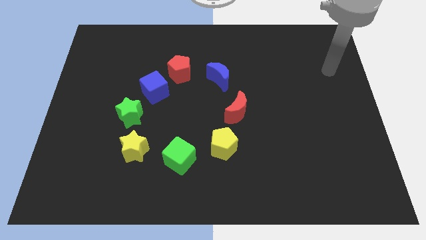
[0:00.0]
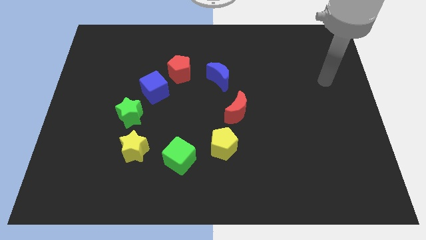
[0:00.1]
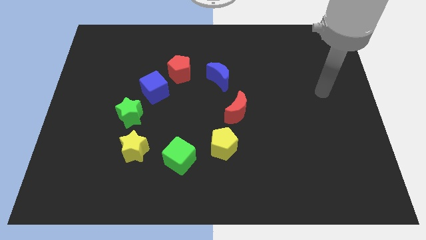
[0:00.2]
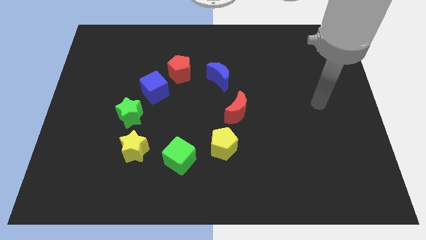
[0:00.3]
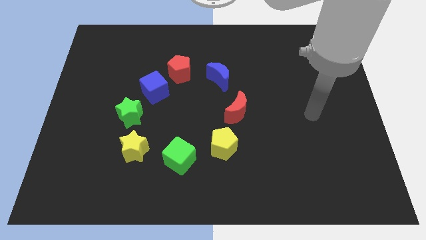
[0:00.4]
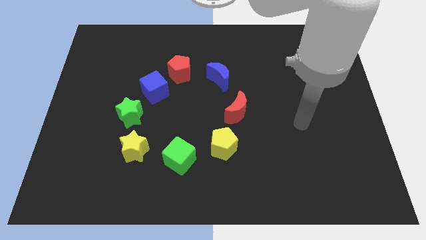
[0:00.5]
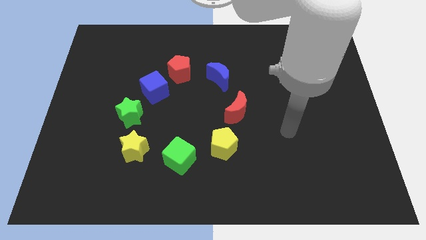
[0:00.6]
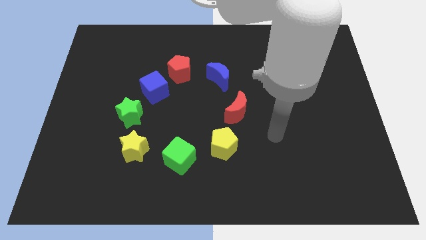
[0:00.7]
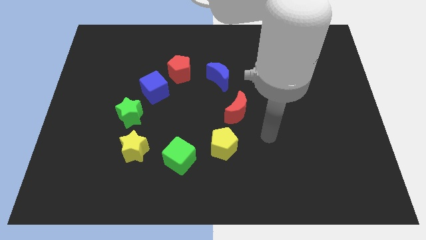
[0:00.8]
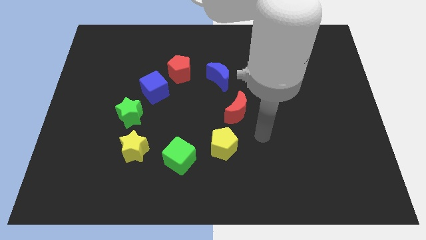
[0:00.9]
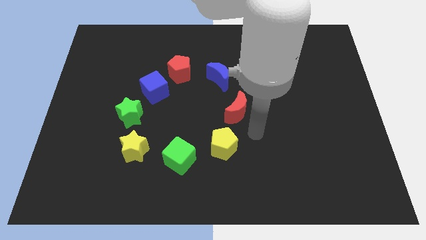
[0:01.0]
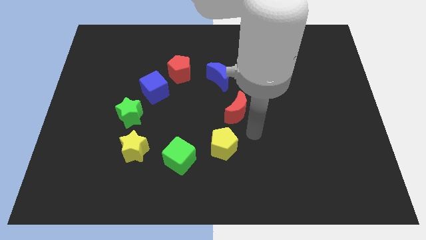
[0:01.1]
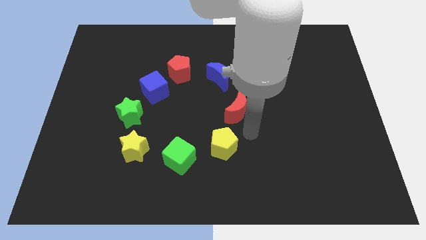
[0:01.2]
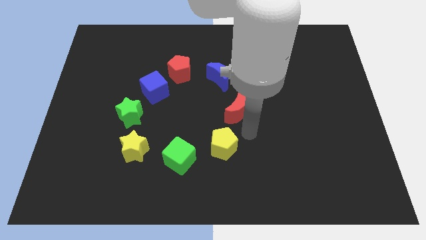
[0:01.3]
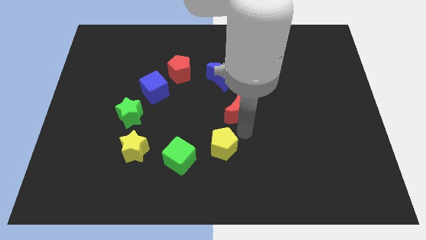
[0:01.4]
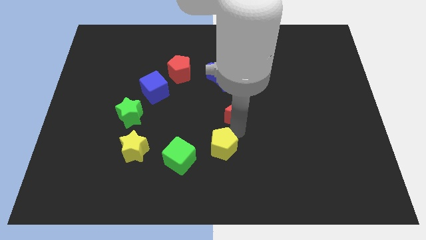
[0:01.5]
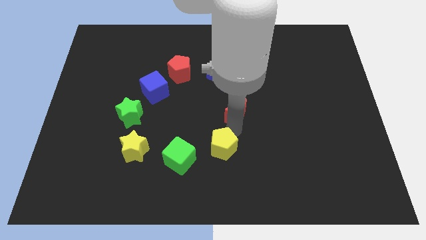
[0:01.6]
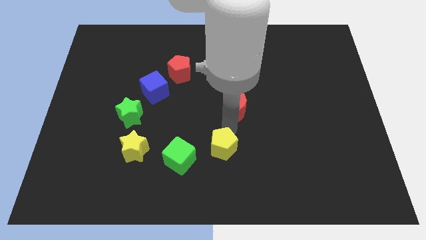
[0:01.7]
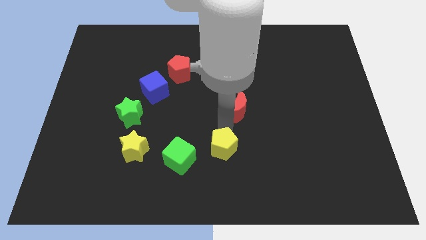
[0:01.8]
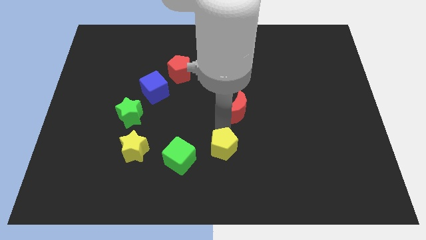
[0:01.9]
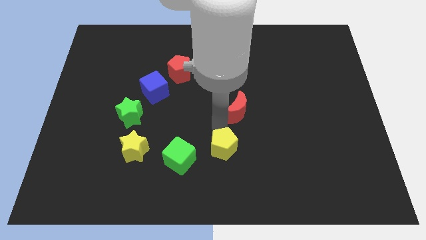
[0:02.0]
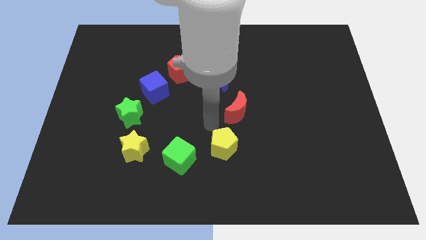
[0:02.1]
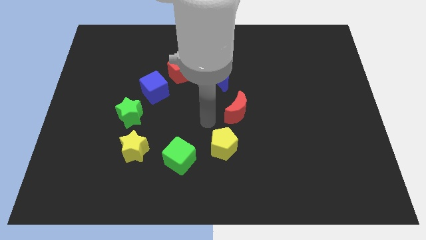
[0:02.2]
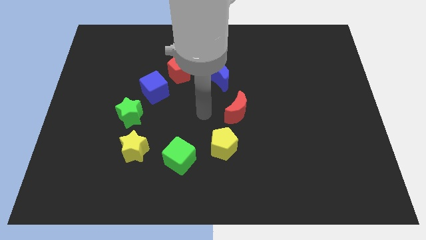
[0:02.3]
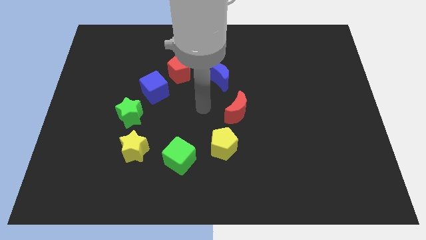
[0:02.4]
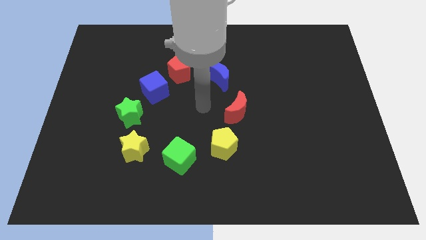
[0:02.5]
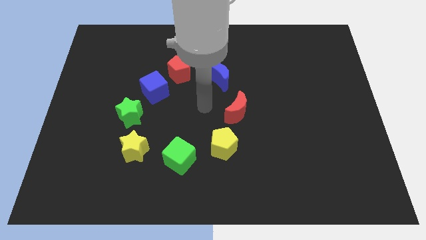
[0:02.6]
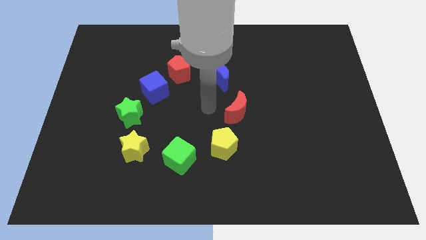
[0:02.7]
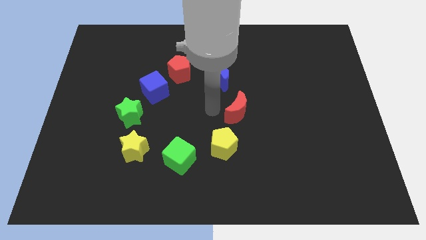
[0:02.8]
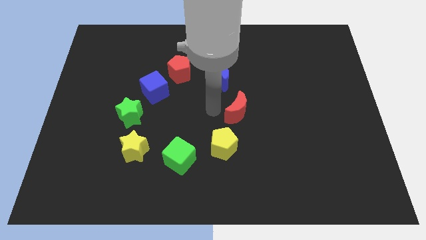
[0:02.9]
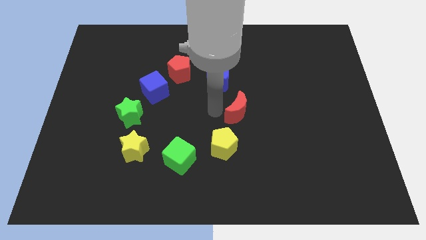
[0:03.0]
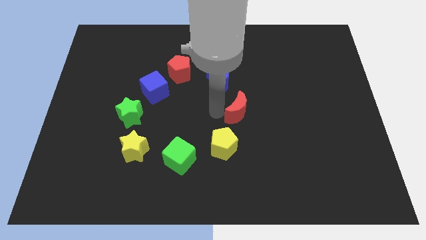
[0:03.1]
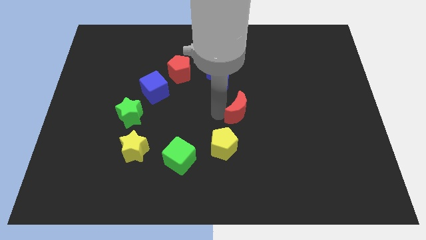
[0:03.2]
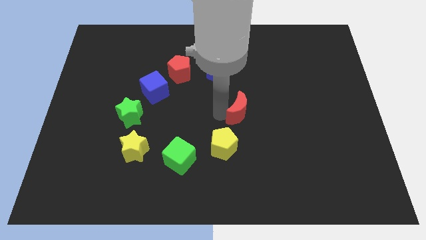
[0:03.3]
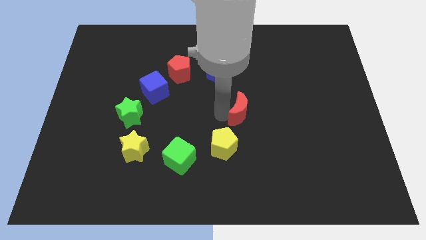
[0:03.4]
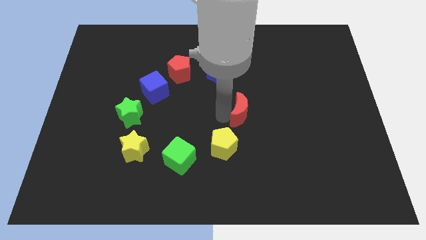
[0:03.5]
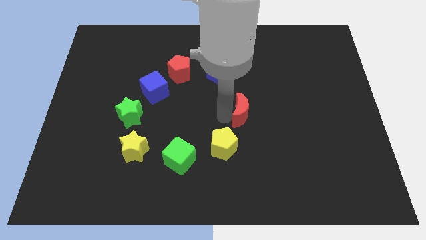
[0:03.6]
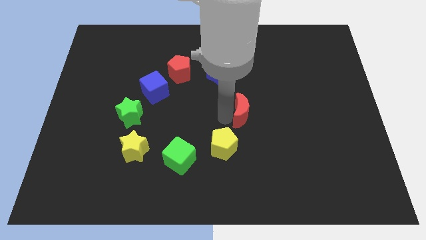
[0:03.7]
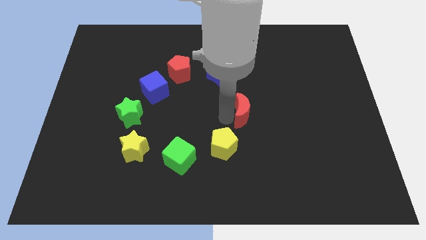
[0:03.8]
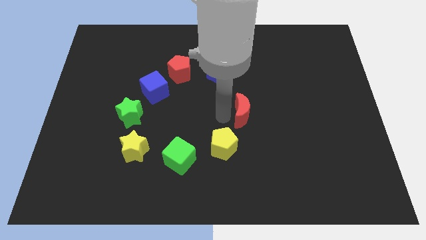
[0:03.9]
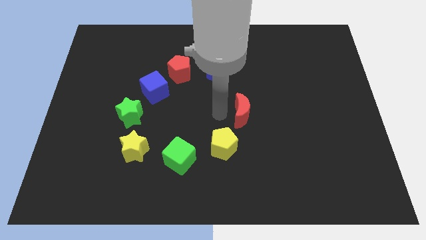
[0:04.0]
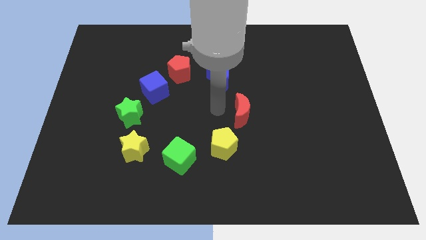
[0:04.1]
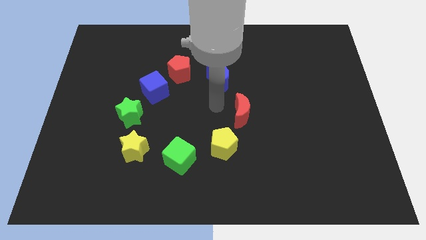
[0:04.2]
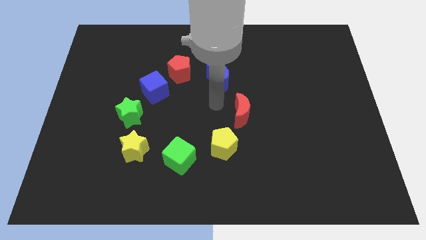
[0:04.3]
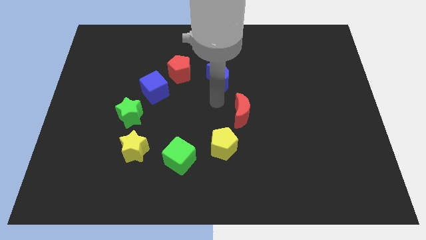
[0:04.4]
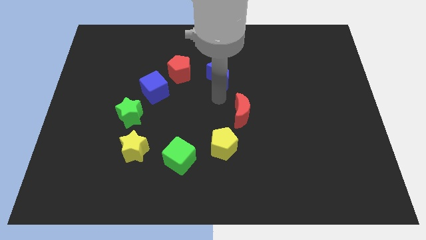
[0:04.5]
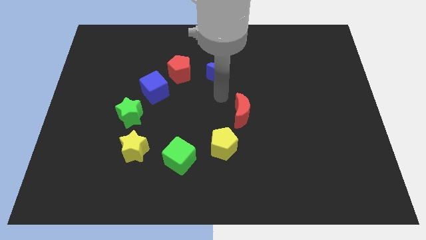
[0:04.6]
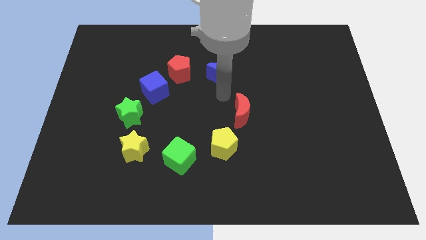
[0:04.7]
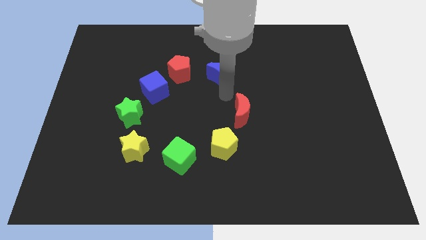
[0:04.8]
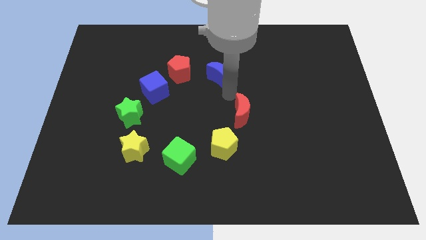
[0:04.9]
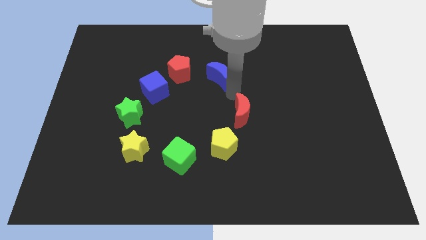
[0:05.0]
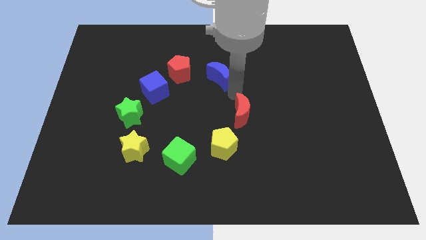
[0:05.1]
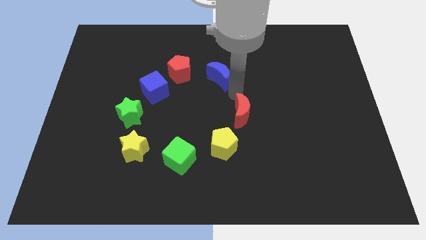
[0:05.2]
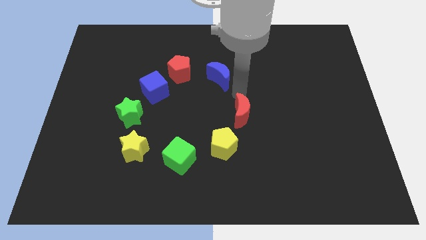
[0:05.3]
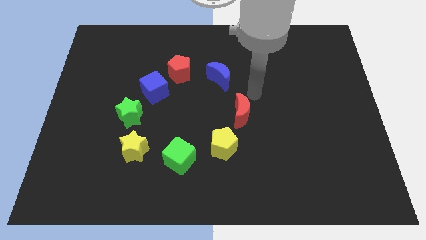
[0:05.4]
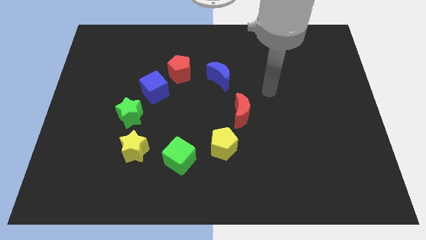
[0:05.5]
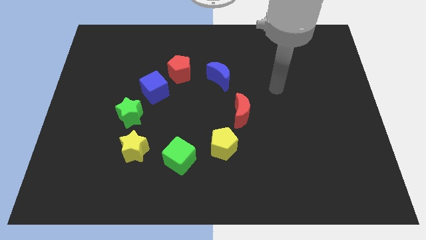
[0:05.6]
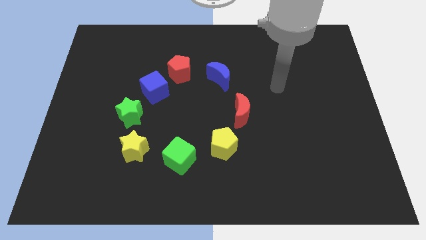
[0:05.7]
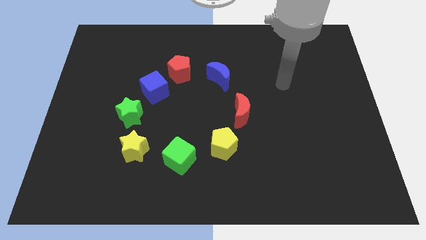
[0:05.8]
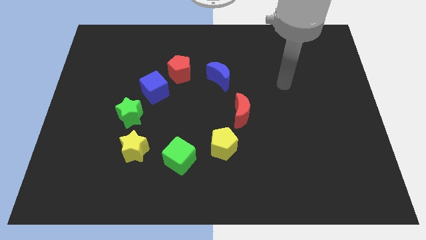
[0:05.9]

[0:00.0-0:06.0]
adjust the red moon to form a circle

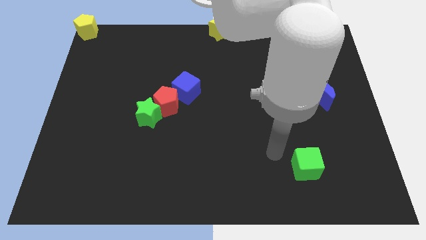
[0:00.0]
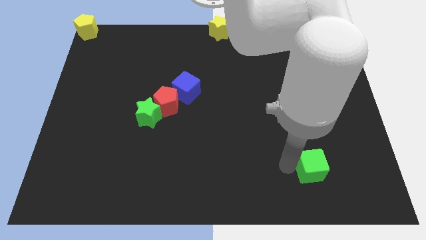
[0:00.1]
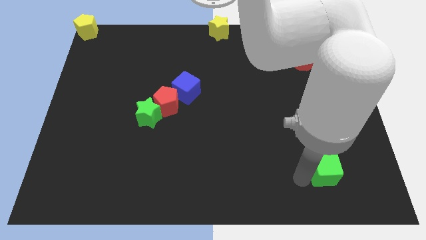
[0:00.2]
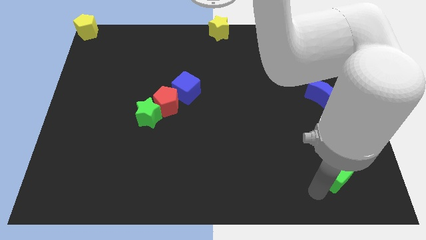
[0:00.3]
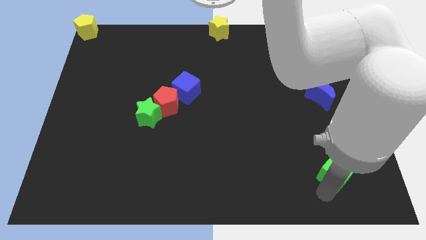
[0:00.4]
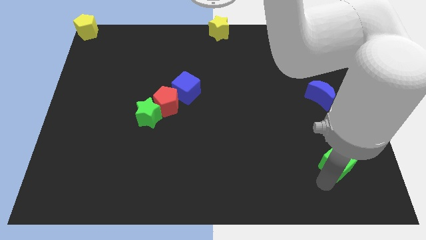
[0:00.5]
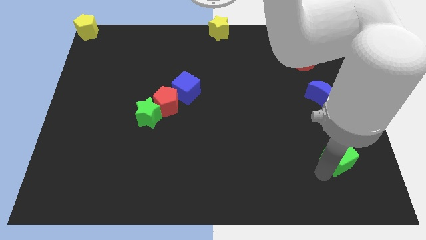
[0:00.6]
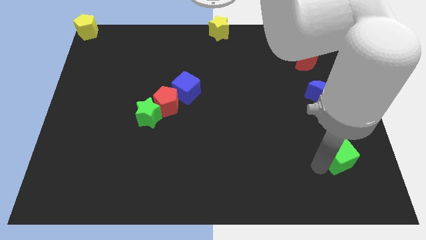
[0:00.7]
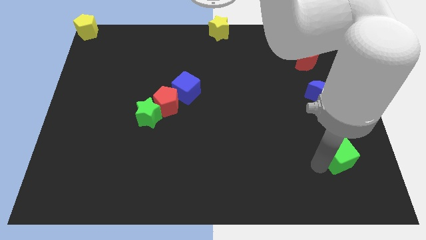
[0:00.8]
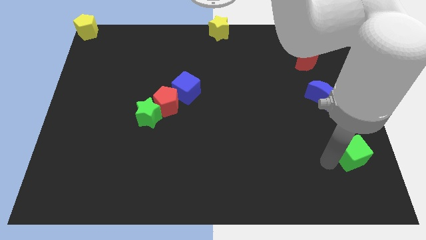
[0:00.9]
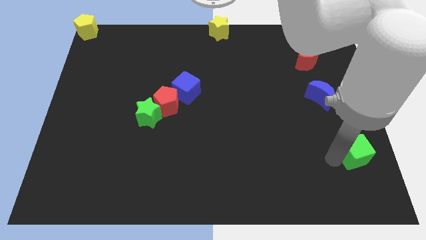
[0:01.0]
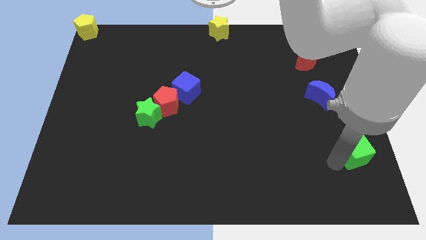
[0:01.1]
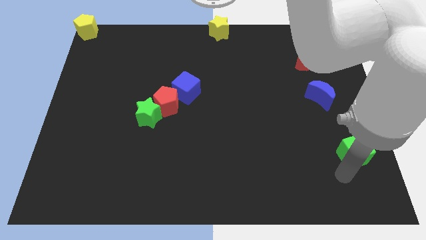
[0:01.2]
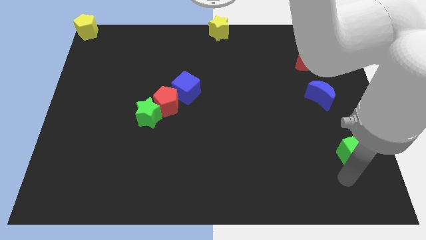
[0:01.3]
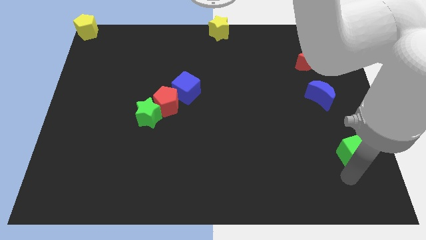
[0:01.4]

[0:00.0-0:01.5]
push green cube towards right

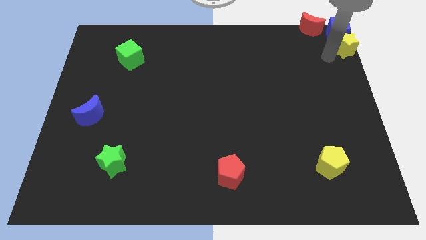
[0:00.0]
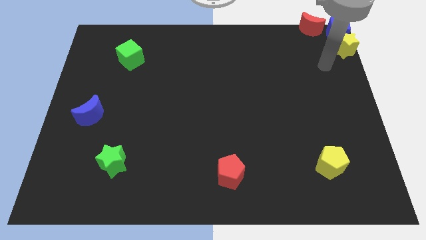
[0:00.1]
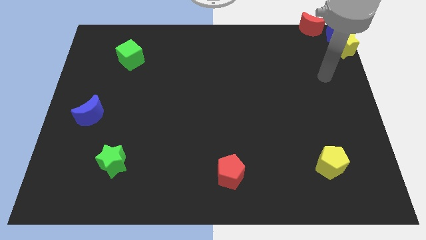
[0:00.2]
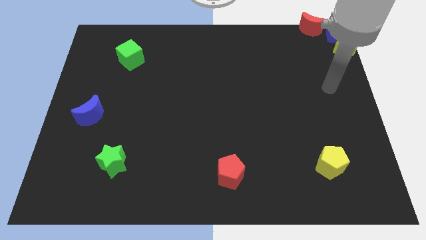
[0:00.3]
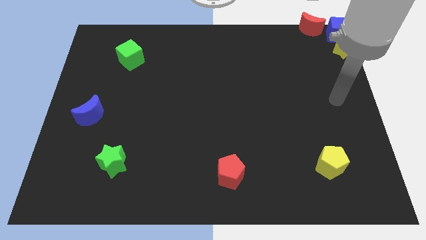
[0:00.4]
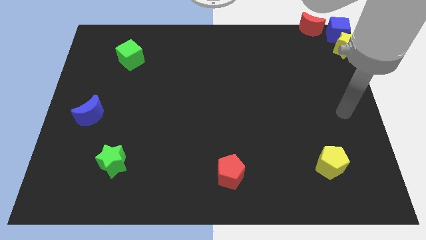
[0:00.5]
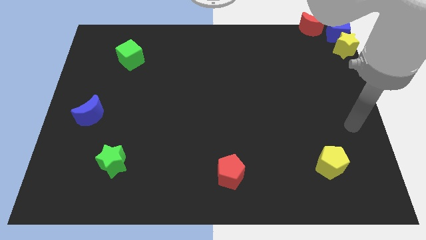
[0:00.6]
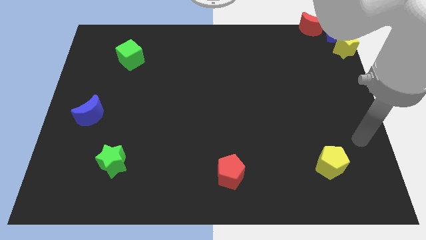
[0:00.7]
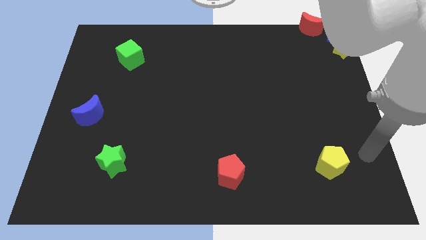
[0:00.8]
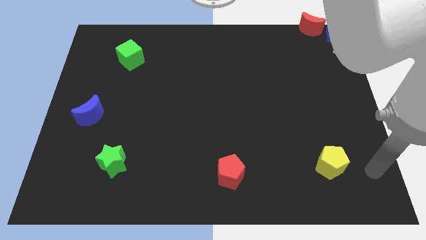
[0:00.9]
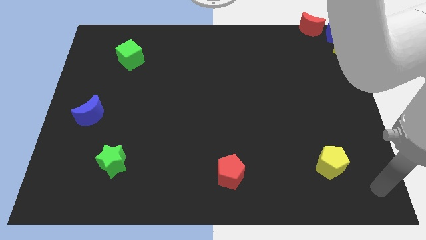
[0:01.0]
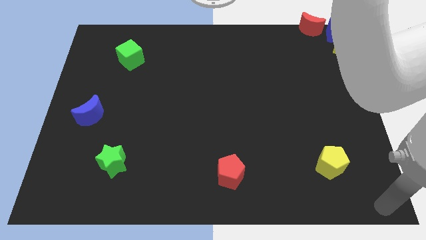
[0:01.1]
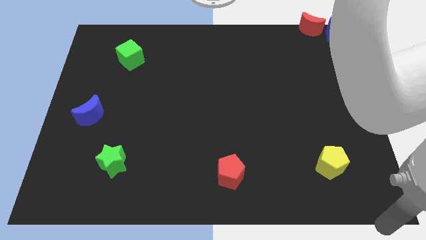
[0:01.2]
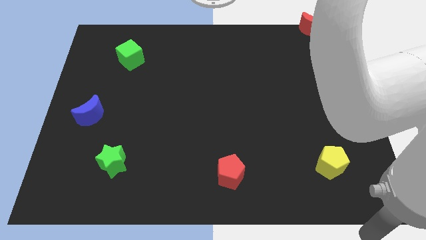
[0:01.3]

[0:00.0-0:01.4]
move the arm to the bottom right corner
